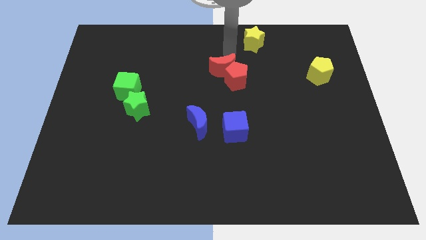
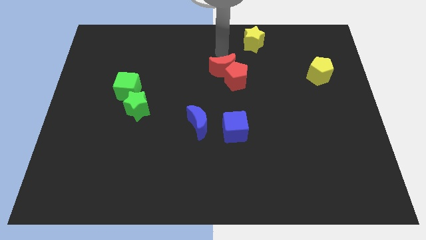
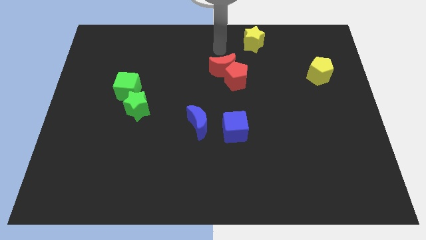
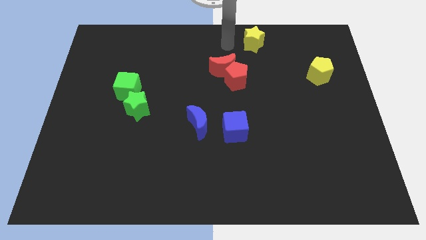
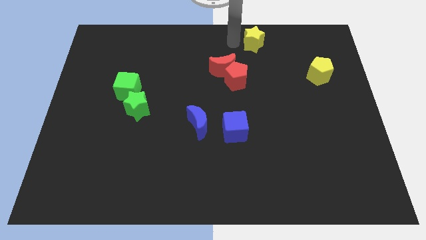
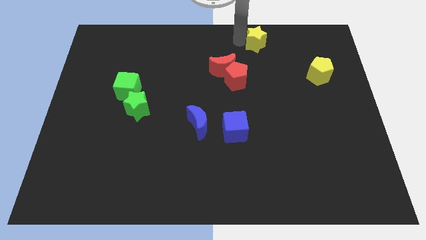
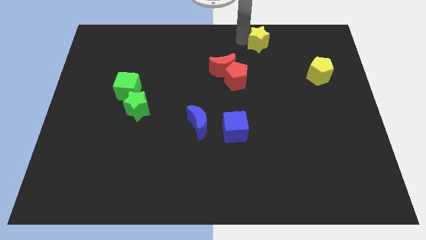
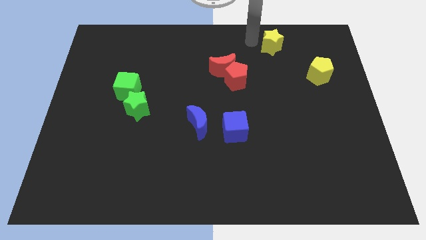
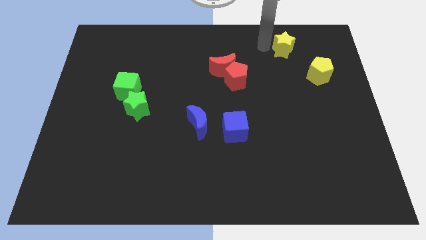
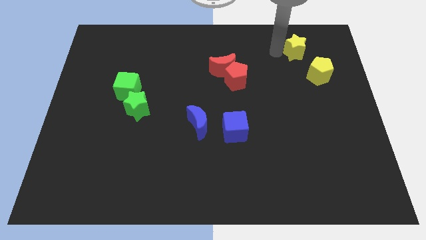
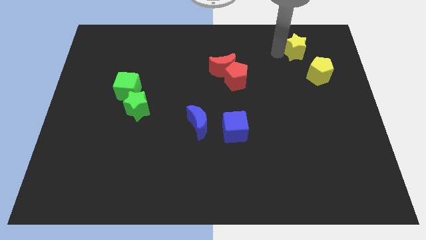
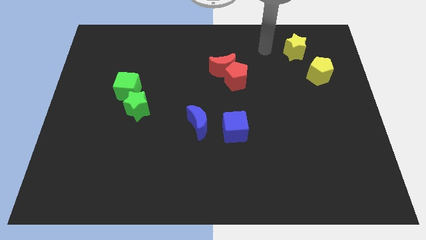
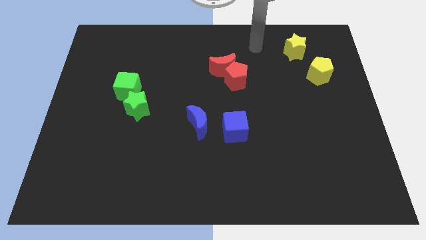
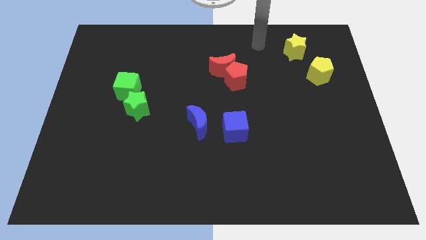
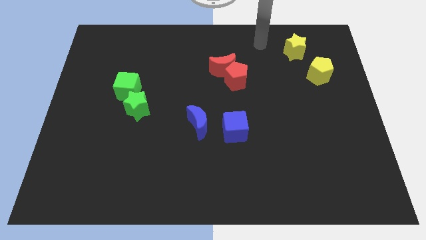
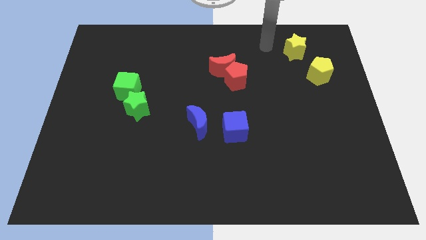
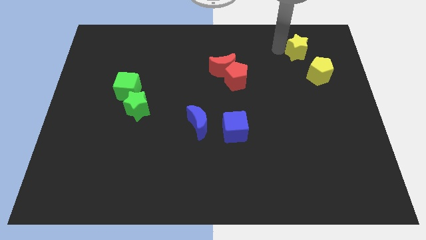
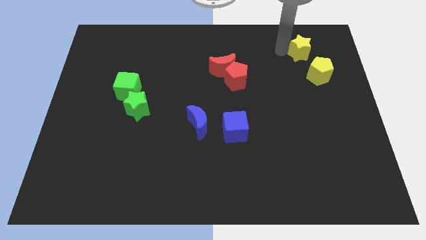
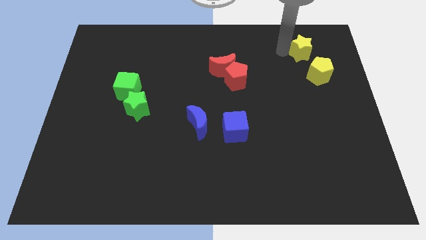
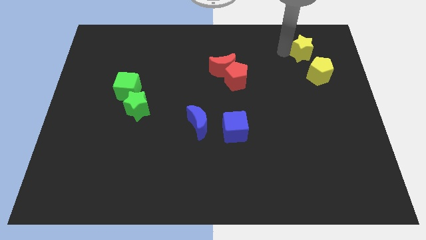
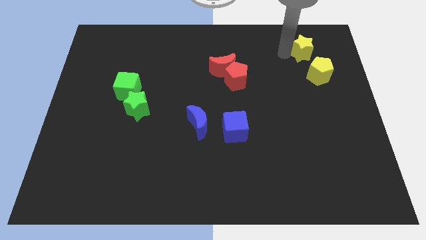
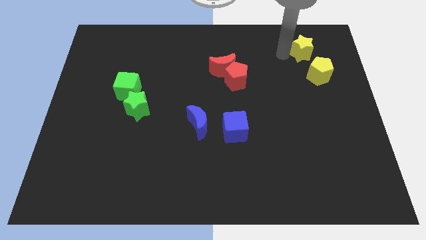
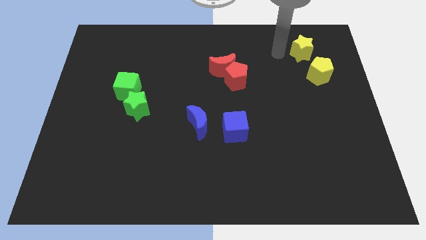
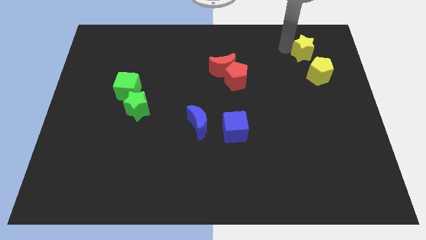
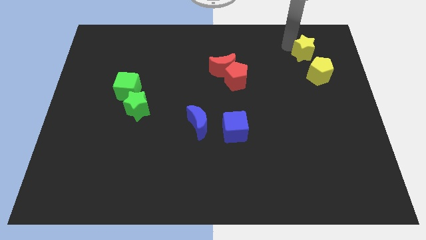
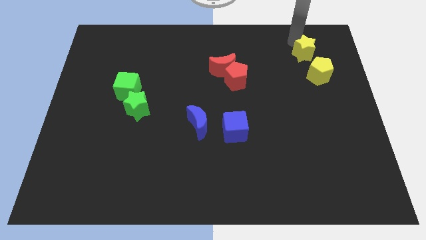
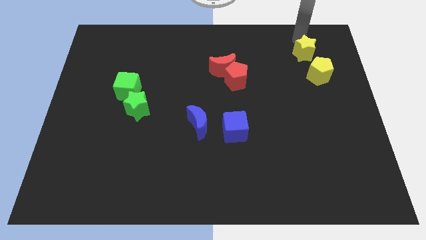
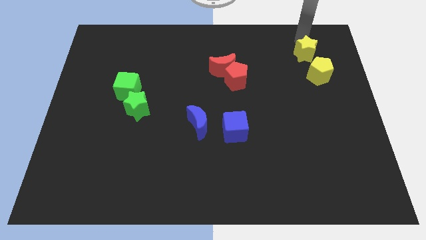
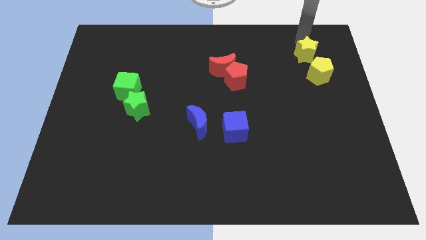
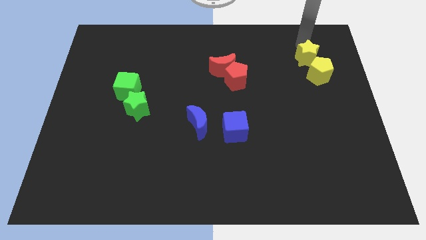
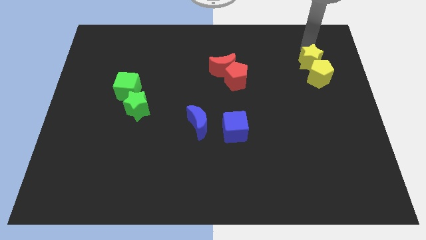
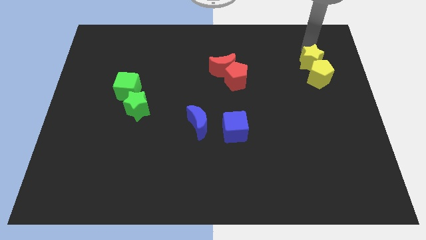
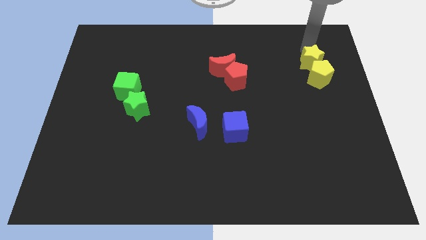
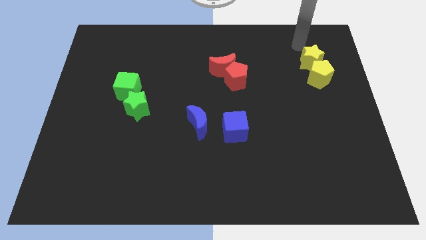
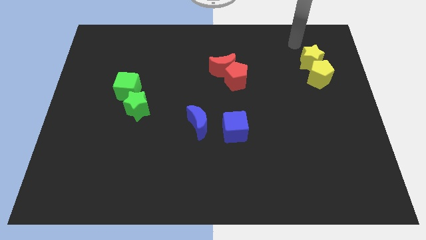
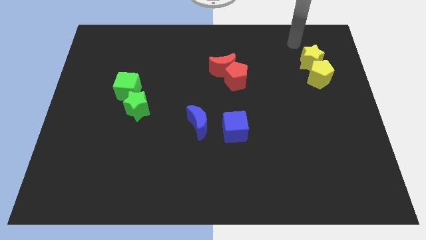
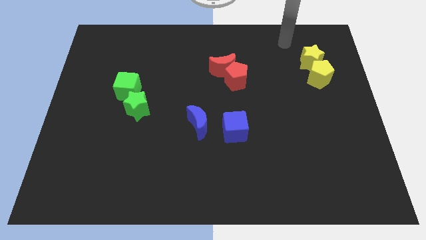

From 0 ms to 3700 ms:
push the yellow star towards the top of the yellow pentagon

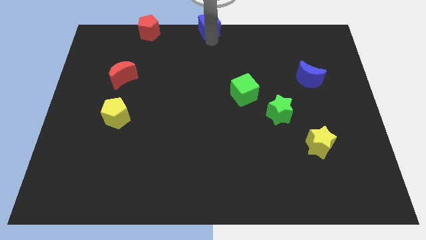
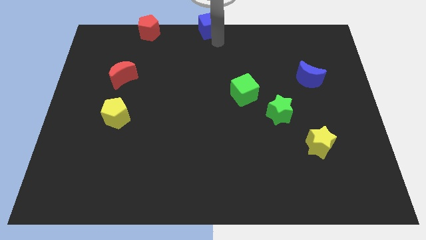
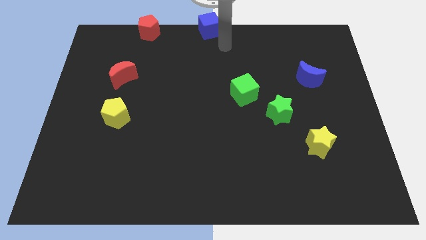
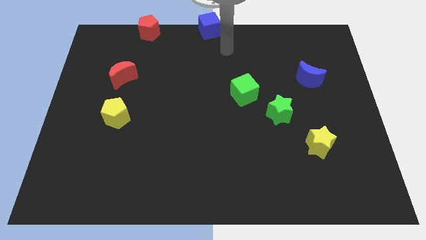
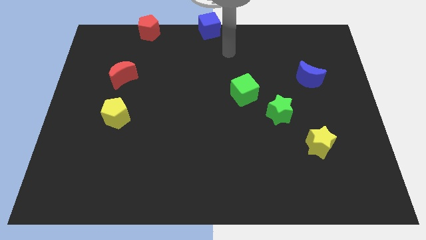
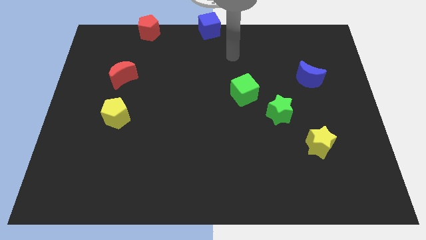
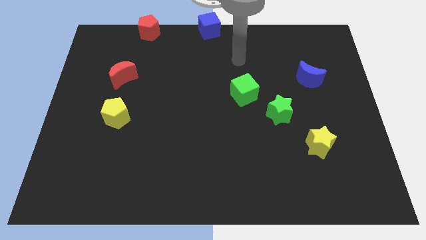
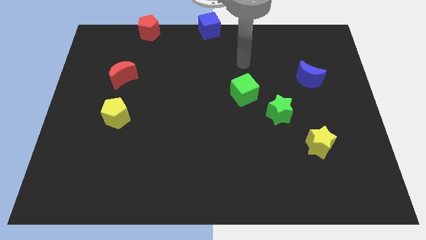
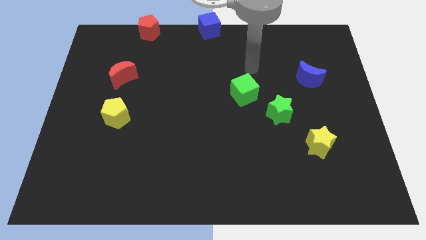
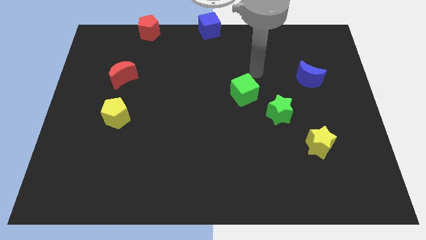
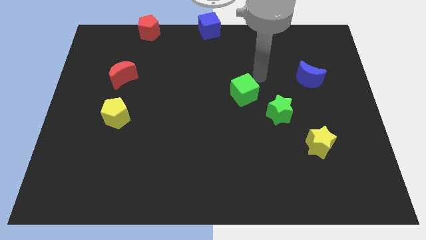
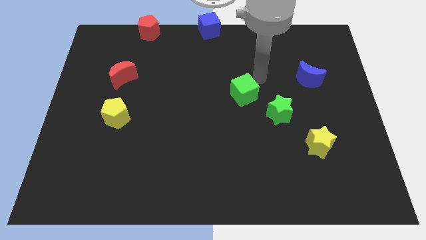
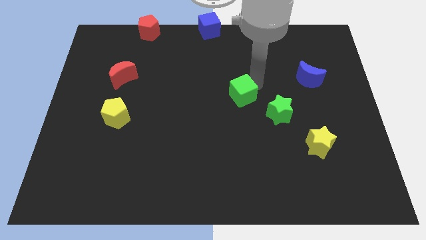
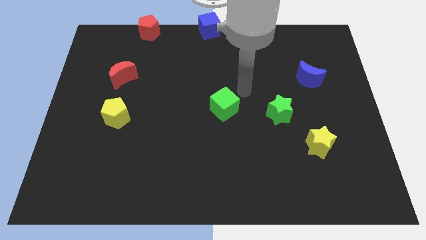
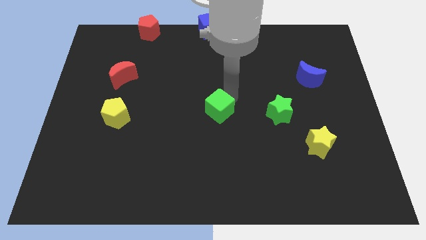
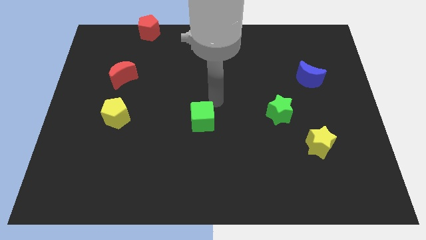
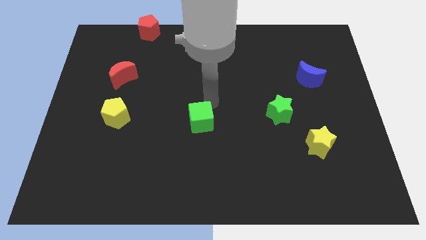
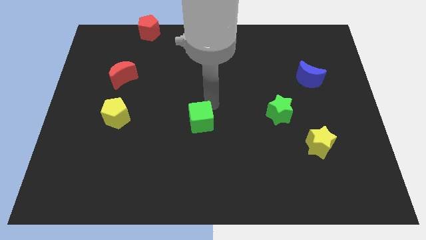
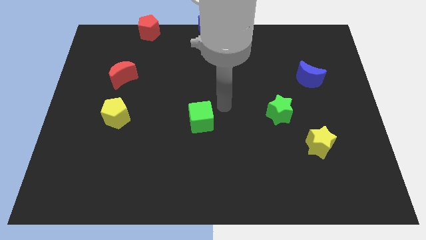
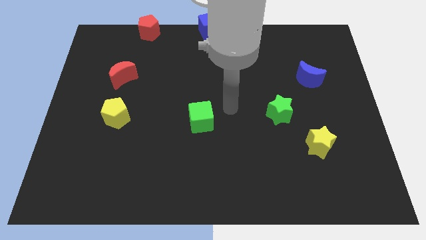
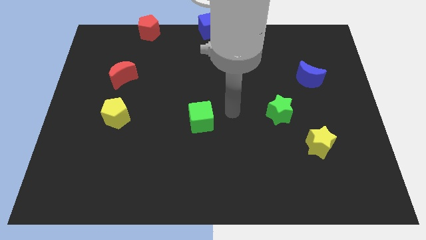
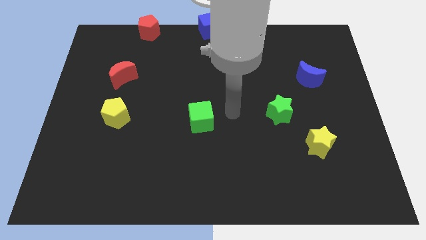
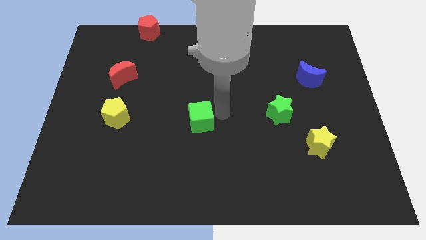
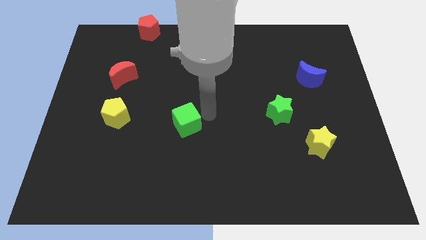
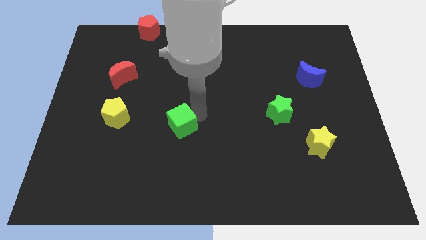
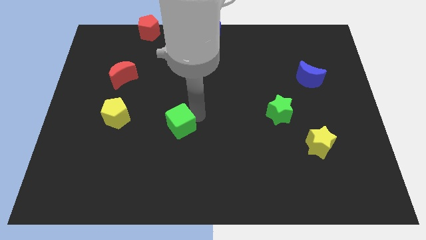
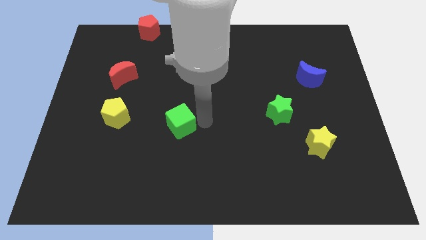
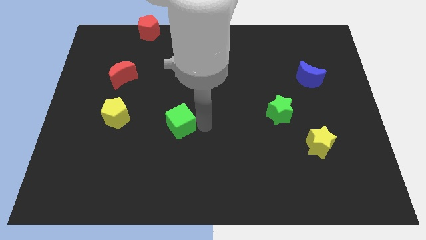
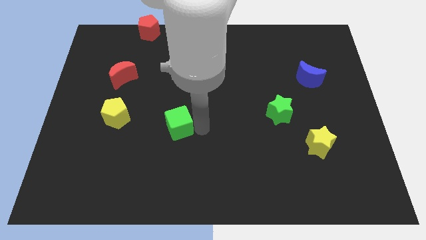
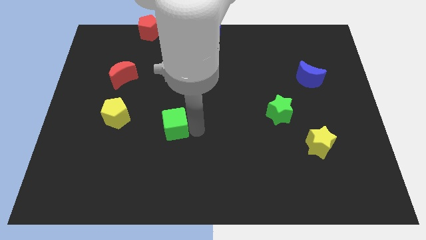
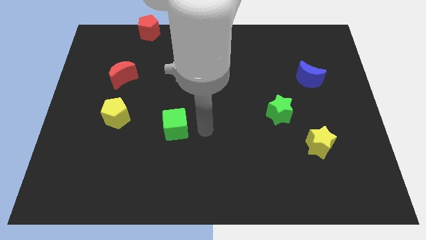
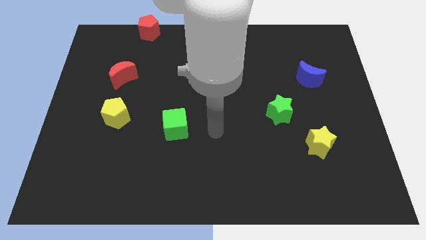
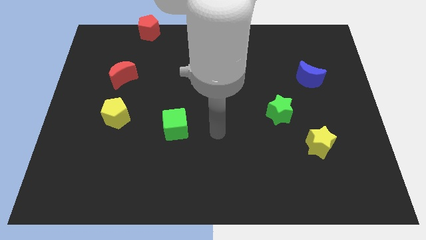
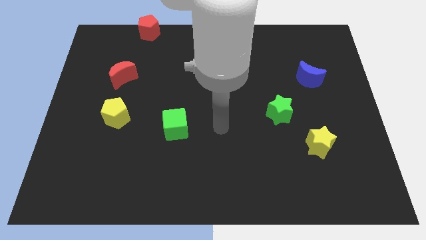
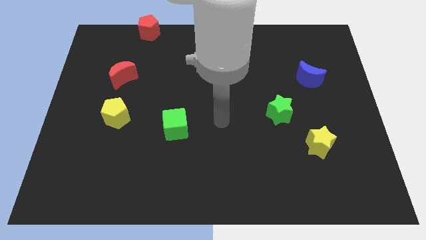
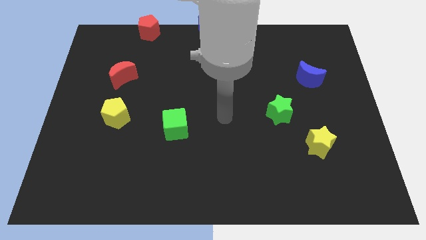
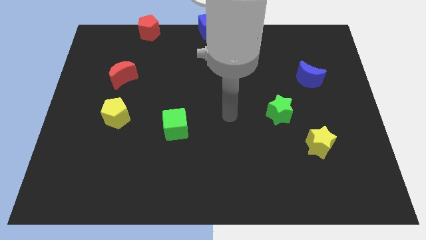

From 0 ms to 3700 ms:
move the green cube to the right of yellow pentagon

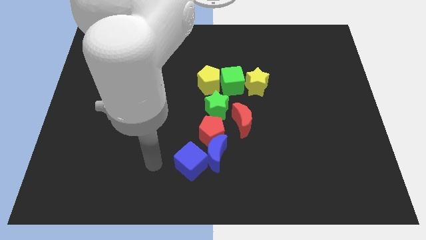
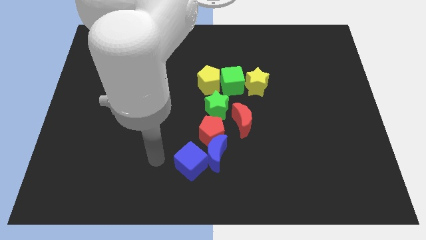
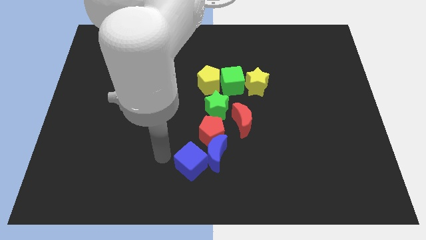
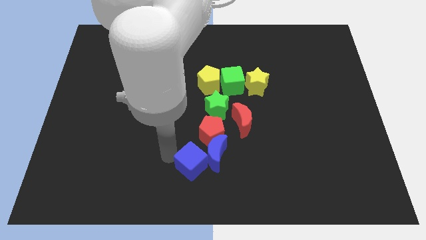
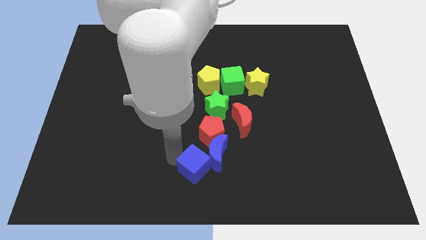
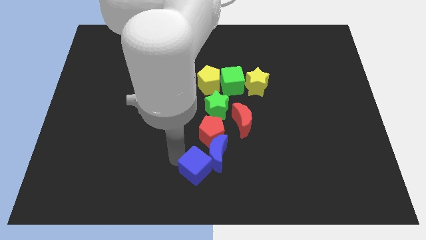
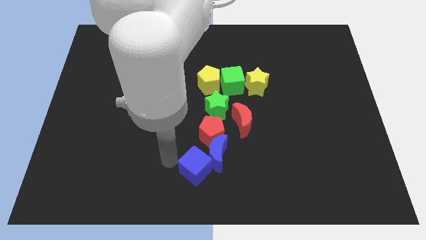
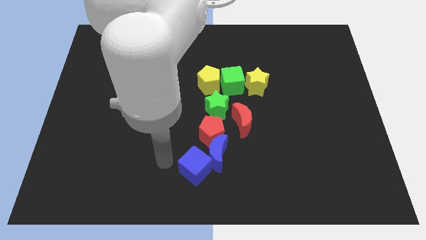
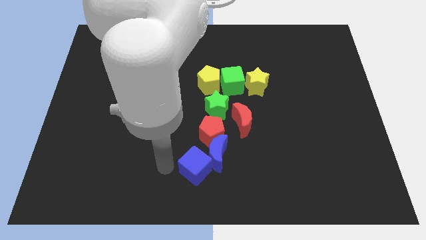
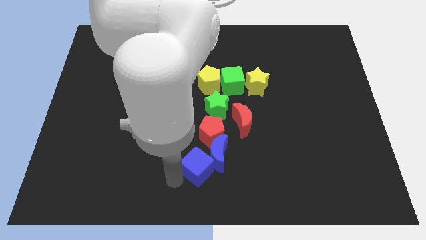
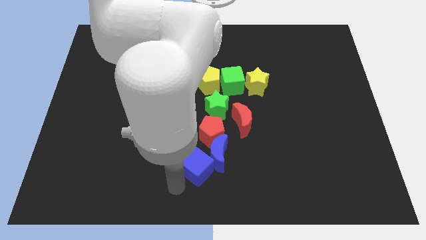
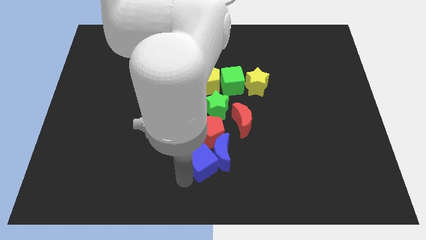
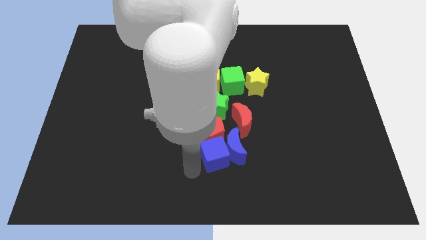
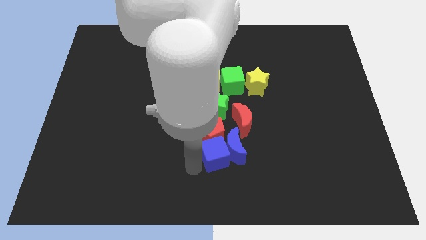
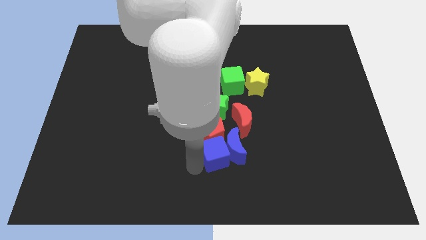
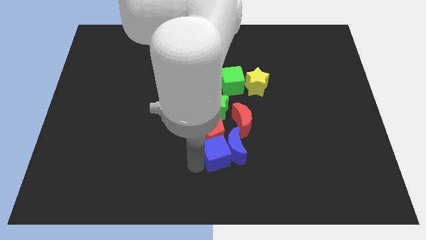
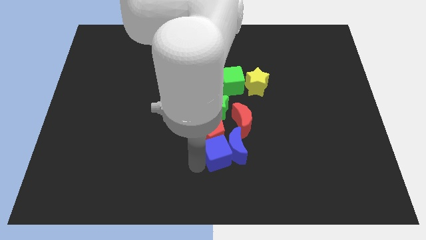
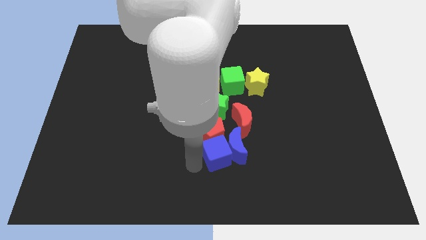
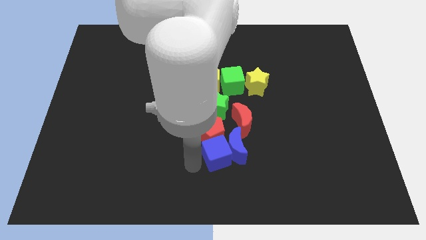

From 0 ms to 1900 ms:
push the blue cube into the red pentagon
